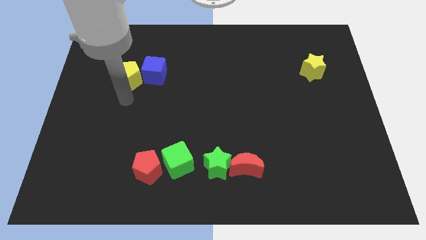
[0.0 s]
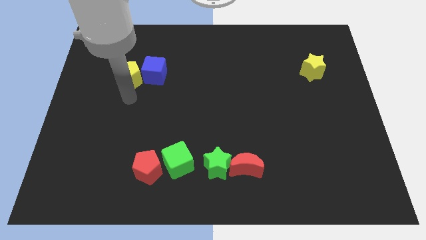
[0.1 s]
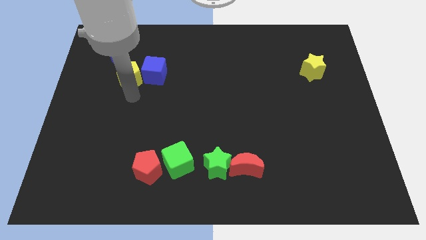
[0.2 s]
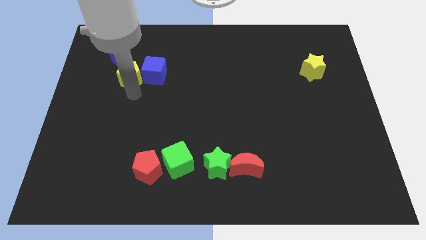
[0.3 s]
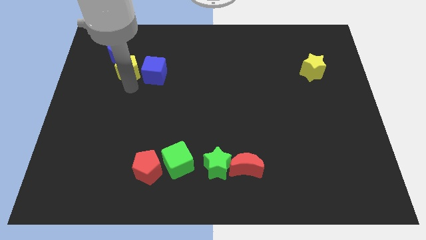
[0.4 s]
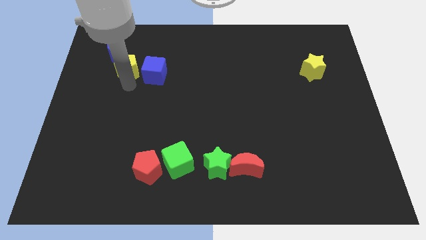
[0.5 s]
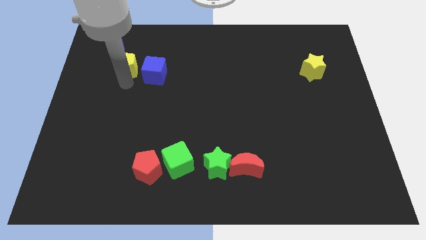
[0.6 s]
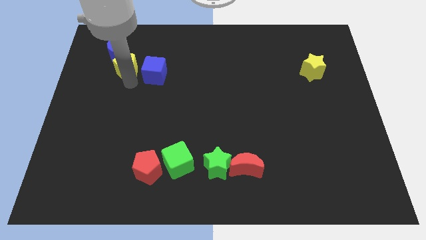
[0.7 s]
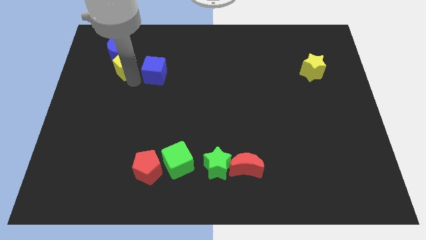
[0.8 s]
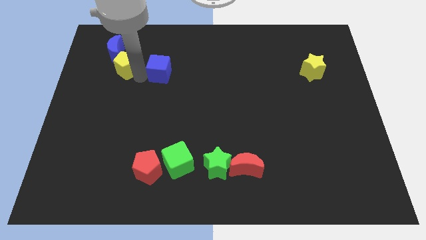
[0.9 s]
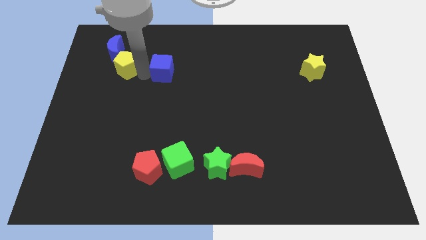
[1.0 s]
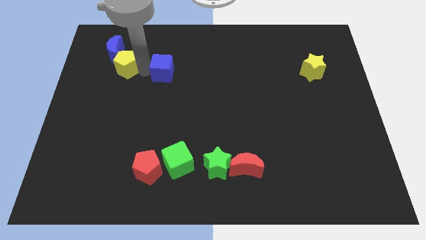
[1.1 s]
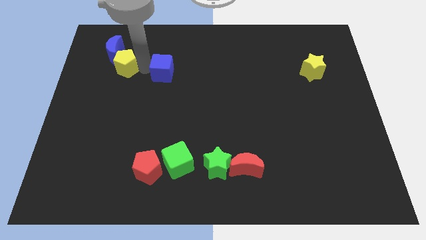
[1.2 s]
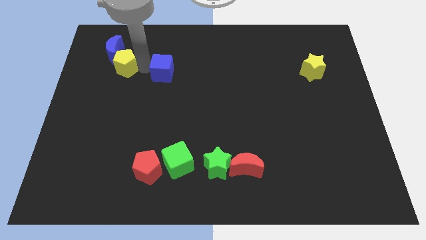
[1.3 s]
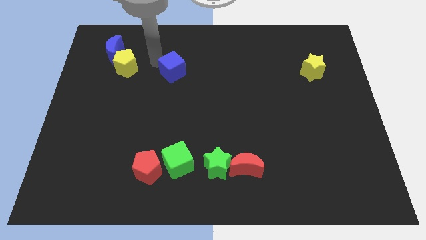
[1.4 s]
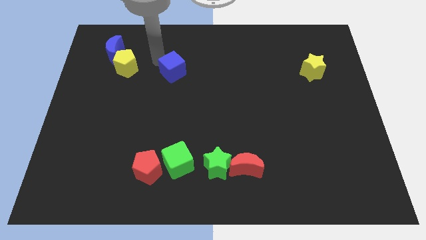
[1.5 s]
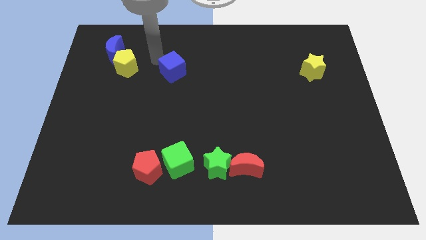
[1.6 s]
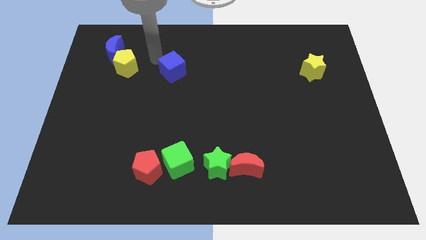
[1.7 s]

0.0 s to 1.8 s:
move the yellow pentagon to the bottom right of the blue crescent

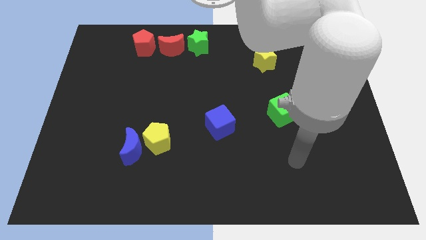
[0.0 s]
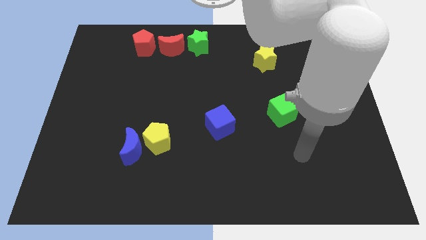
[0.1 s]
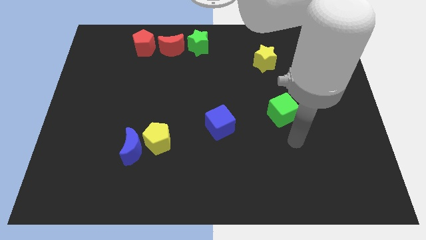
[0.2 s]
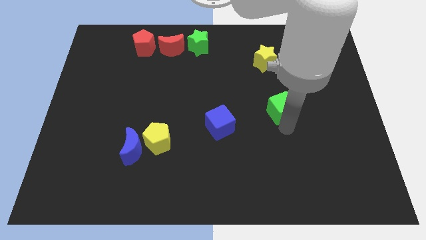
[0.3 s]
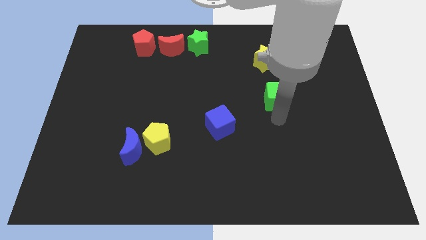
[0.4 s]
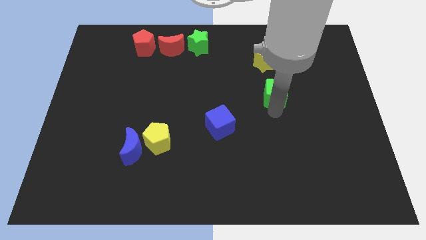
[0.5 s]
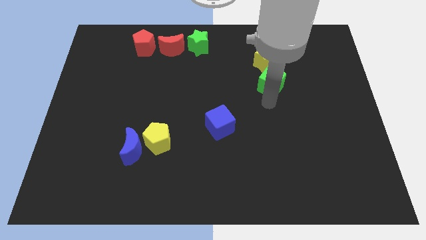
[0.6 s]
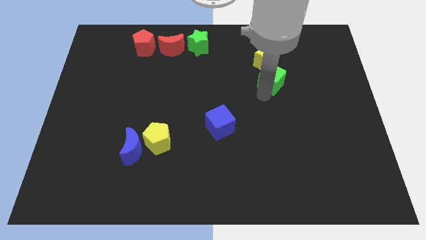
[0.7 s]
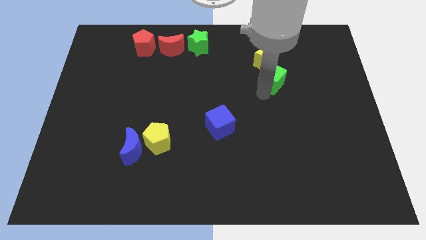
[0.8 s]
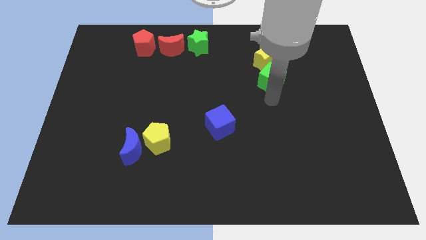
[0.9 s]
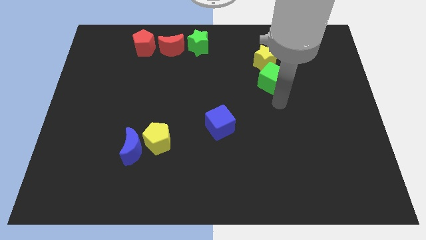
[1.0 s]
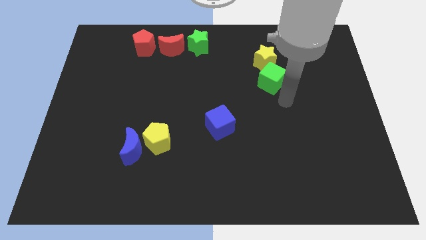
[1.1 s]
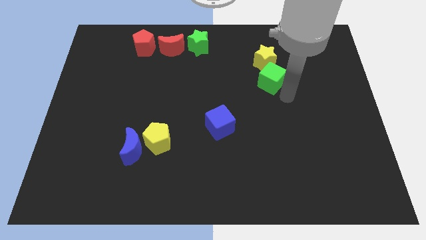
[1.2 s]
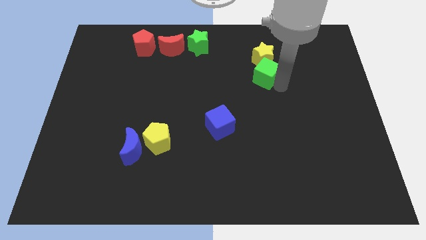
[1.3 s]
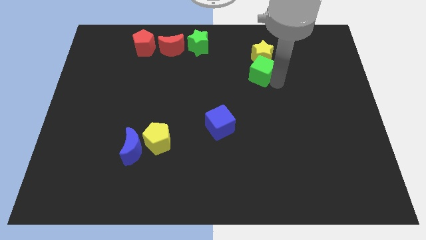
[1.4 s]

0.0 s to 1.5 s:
push the green cube into the yellow star

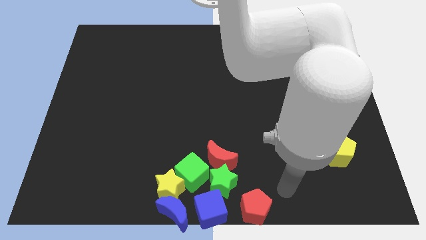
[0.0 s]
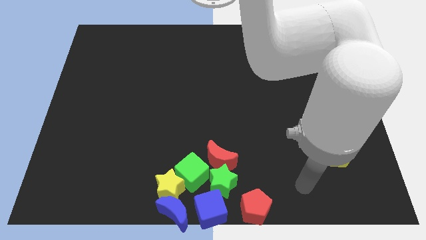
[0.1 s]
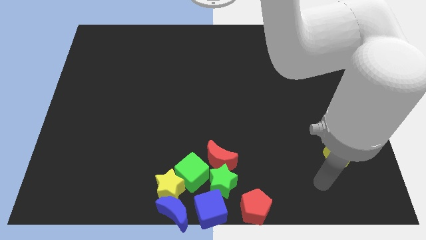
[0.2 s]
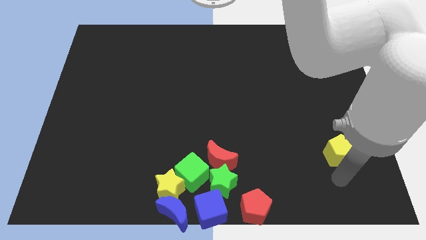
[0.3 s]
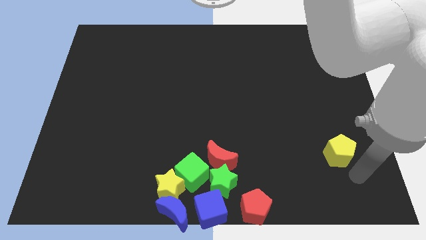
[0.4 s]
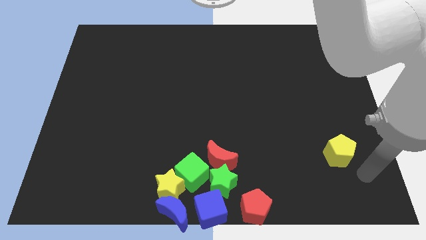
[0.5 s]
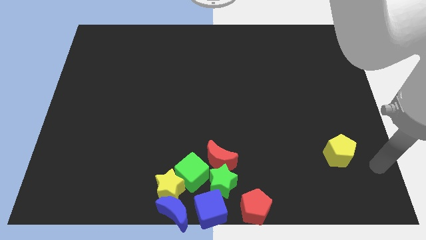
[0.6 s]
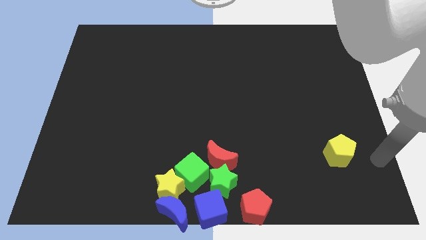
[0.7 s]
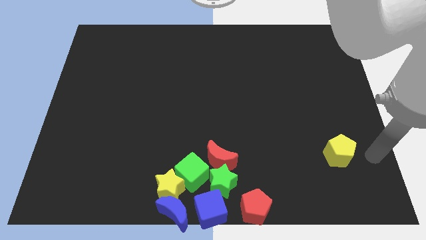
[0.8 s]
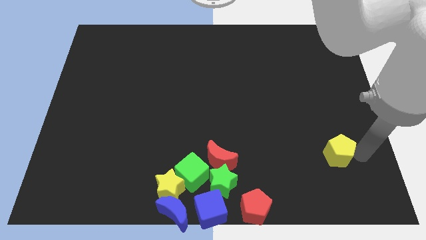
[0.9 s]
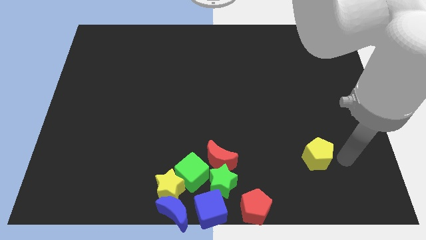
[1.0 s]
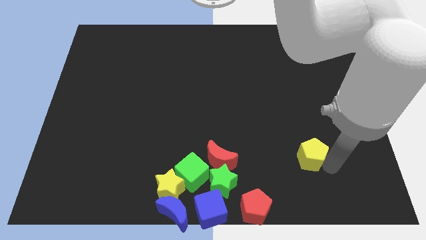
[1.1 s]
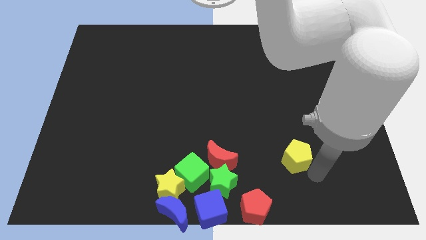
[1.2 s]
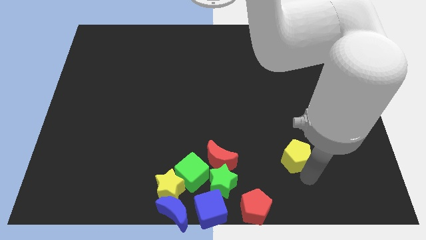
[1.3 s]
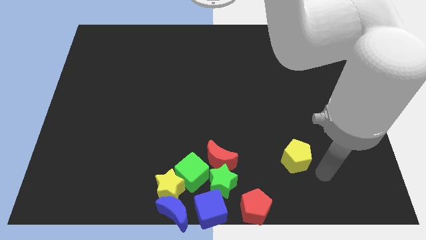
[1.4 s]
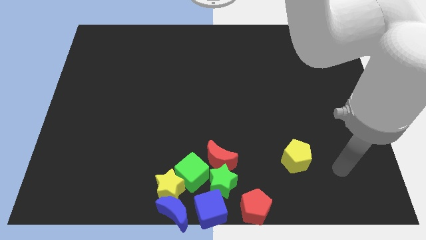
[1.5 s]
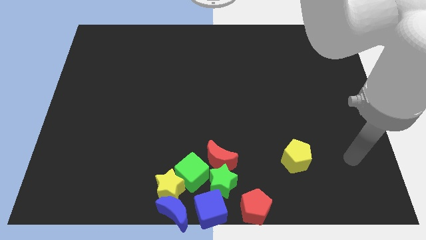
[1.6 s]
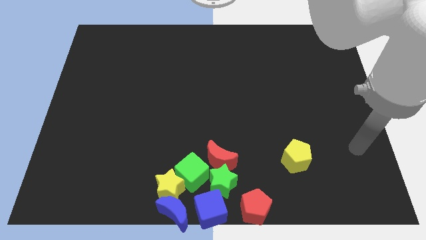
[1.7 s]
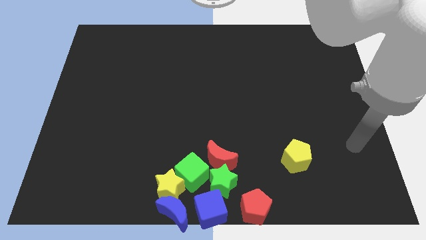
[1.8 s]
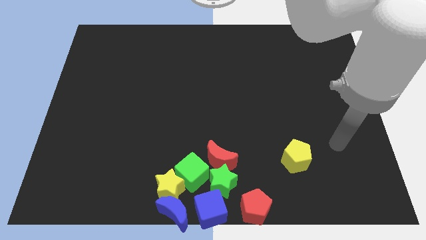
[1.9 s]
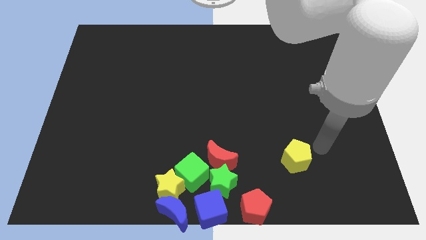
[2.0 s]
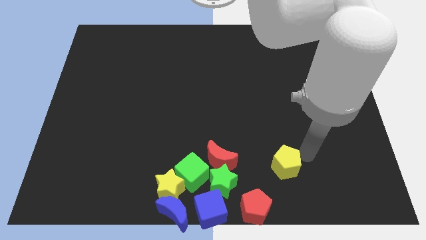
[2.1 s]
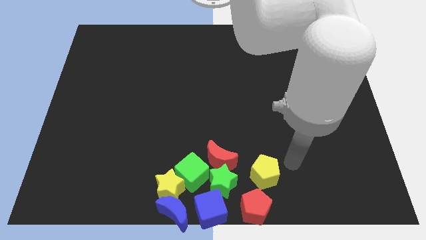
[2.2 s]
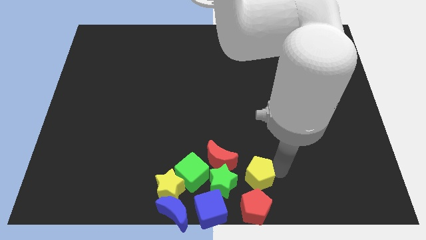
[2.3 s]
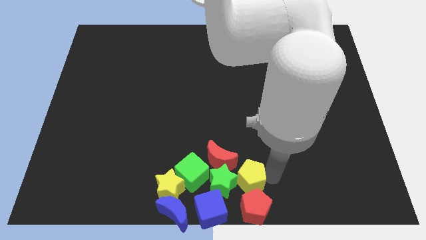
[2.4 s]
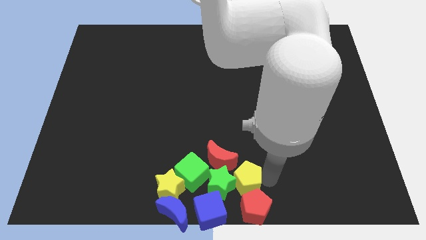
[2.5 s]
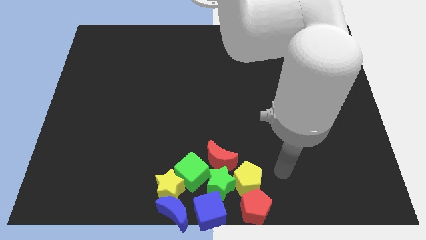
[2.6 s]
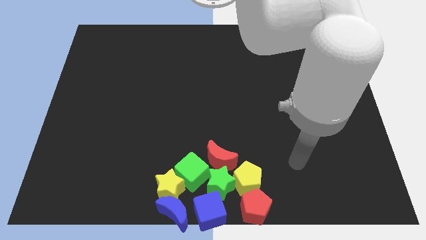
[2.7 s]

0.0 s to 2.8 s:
place the yellow pentagon above the red pentagon

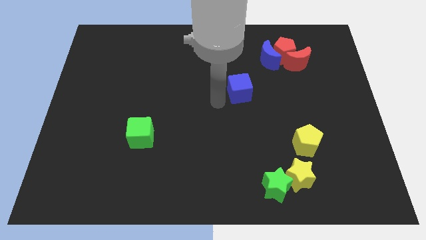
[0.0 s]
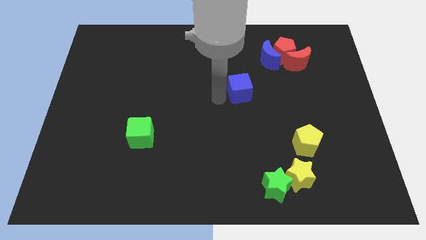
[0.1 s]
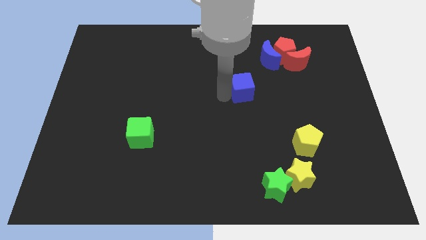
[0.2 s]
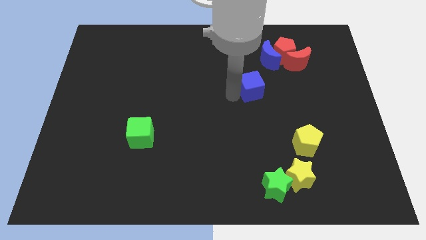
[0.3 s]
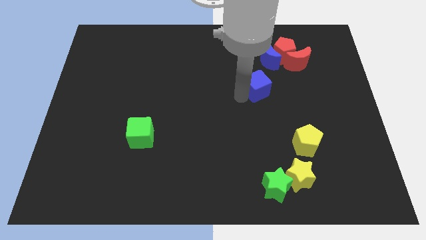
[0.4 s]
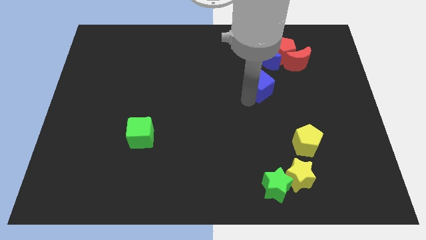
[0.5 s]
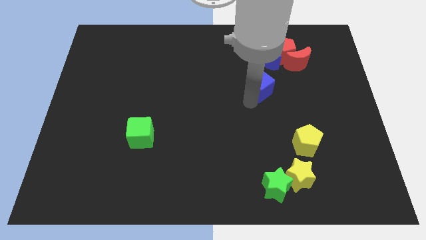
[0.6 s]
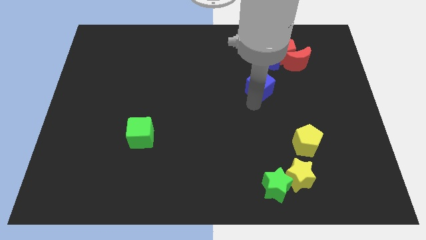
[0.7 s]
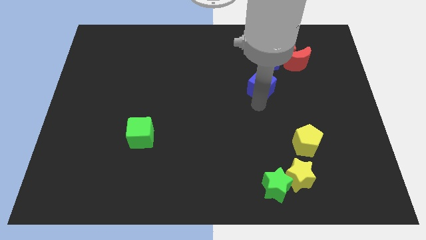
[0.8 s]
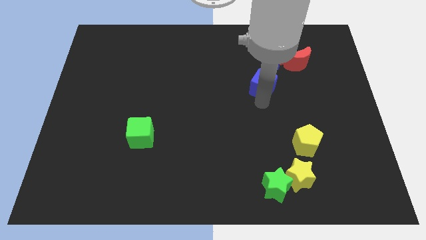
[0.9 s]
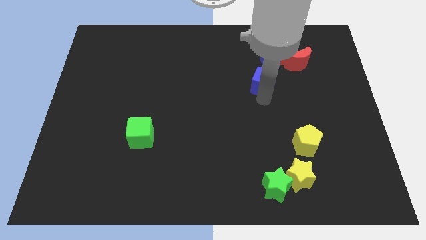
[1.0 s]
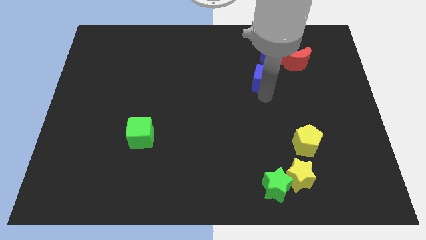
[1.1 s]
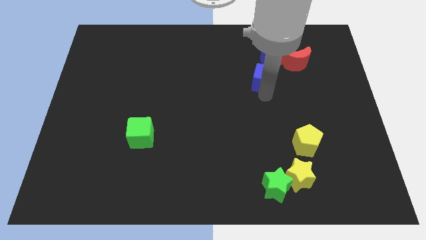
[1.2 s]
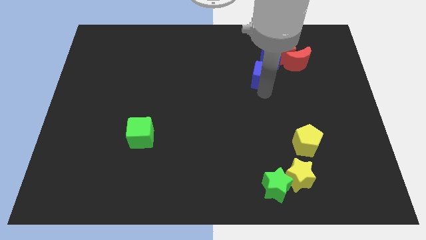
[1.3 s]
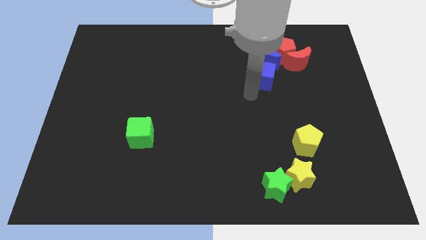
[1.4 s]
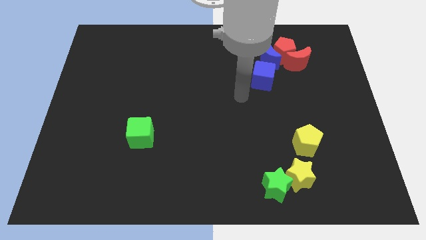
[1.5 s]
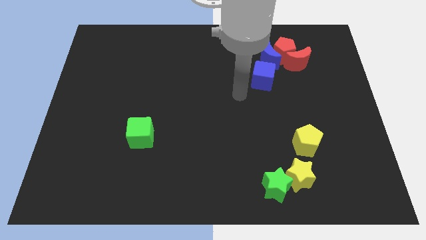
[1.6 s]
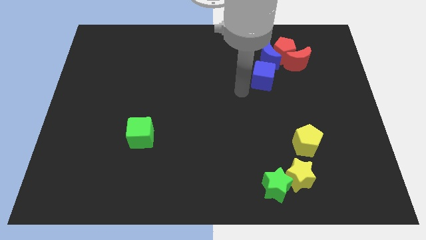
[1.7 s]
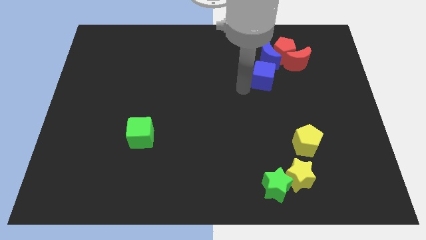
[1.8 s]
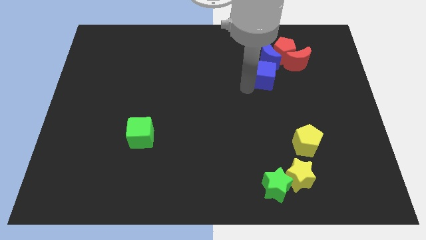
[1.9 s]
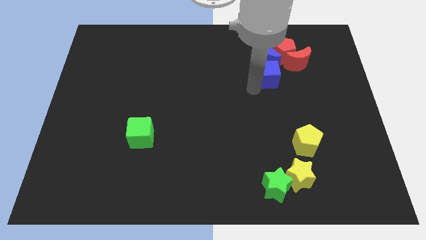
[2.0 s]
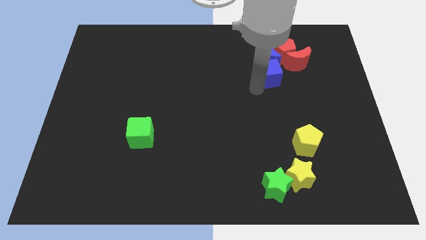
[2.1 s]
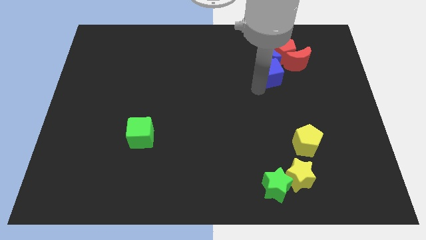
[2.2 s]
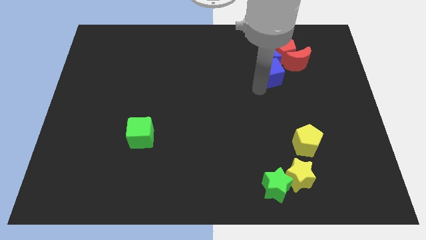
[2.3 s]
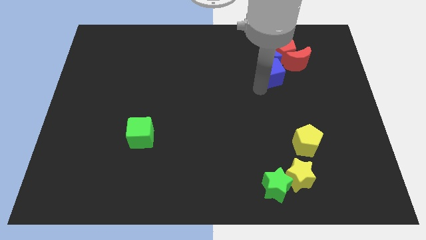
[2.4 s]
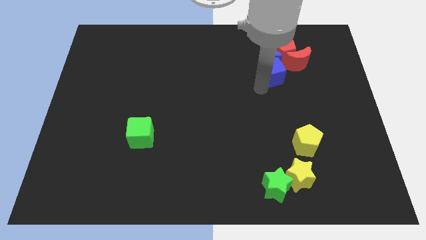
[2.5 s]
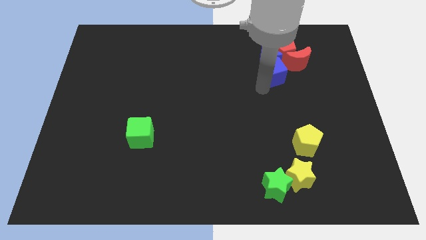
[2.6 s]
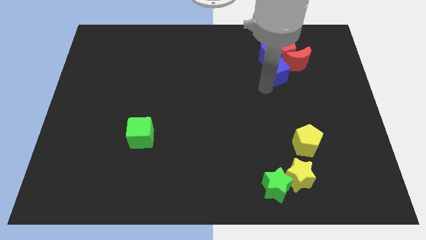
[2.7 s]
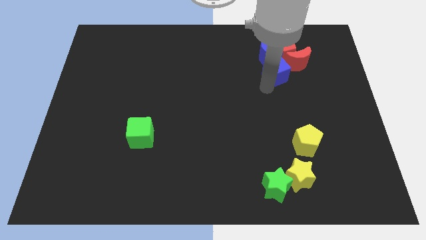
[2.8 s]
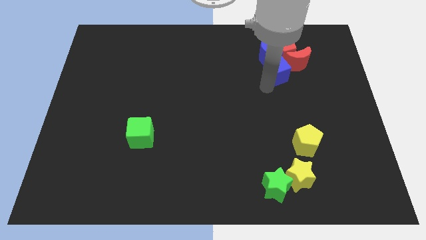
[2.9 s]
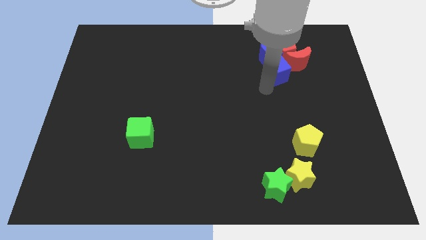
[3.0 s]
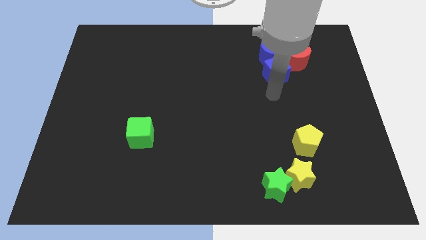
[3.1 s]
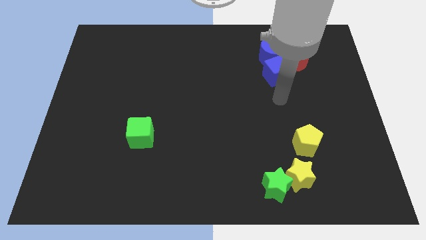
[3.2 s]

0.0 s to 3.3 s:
place the blue cube into the group of red and blue blocks
